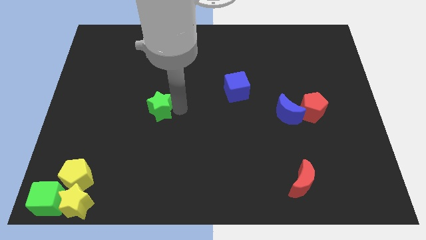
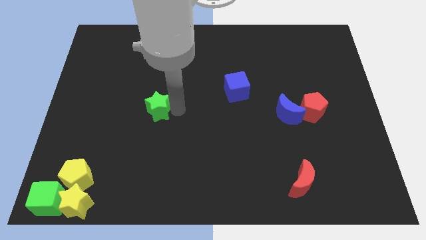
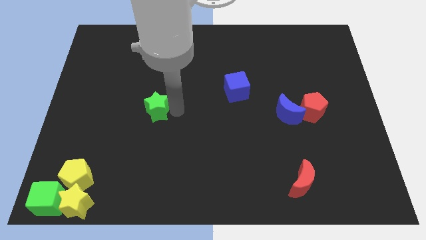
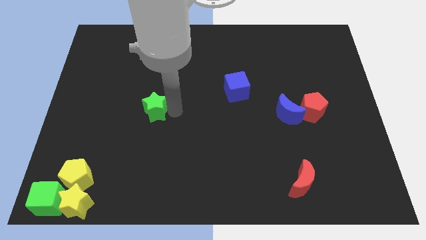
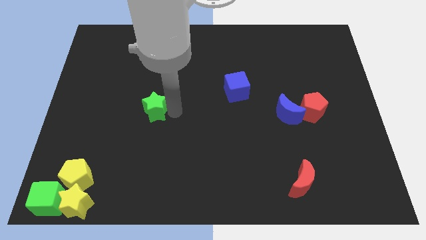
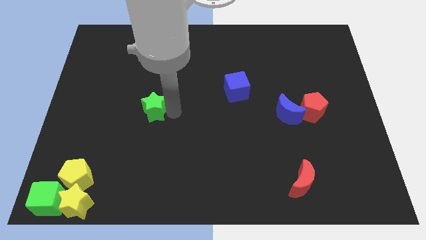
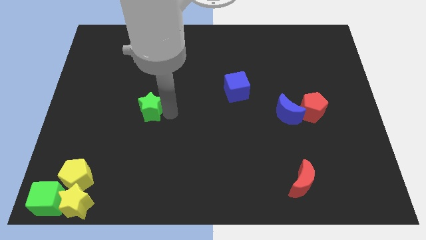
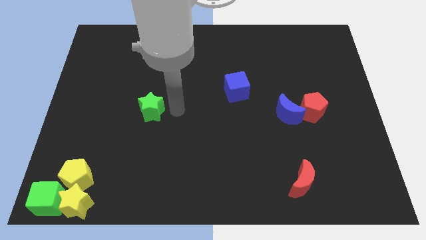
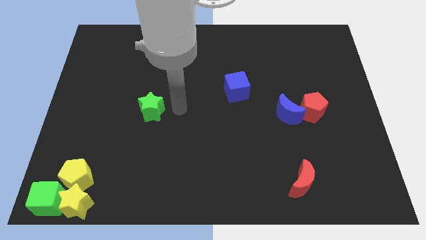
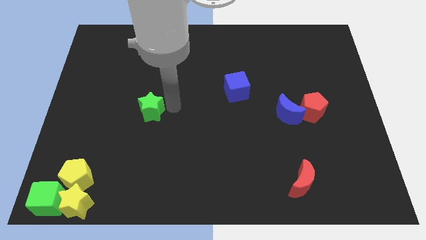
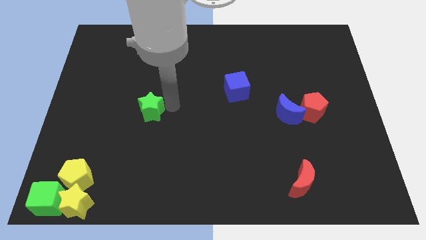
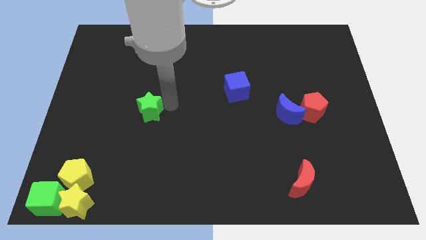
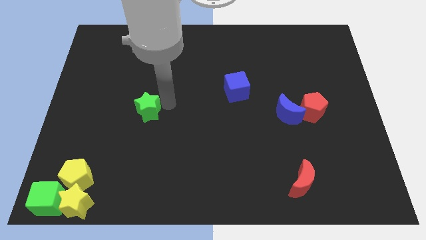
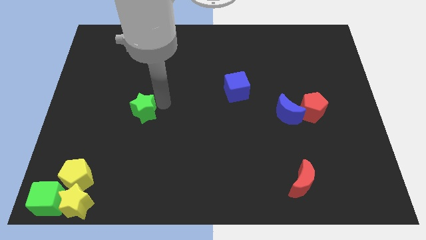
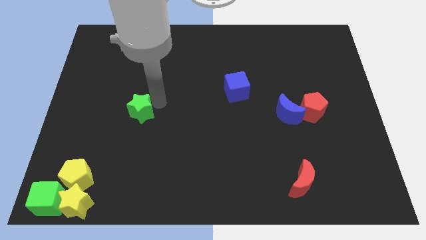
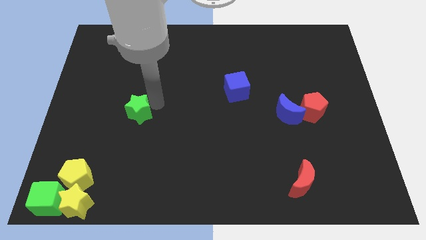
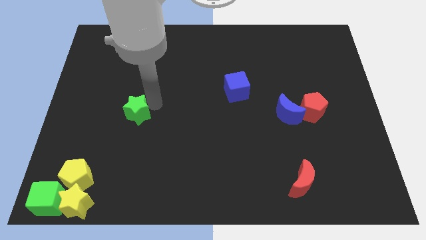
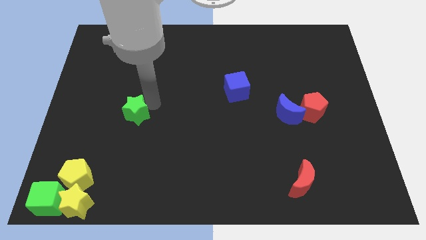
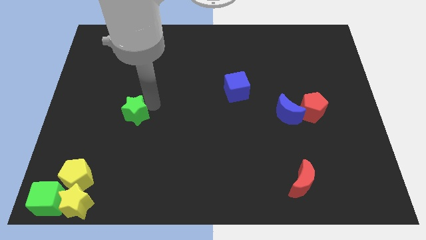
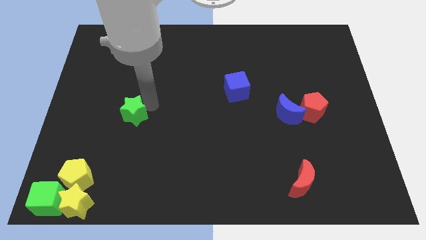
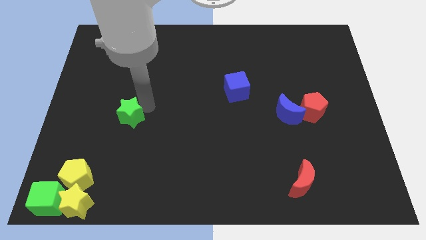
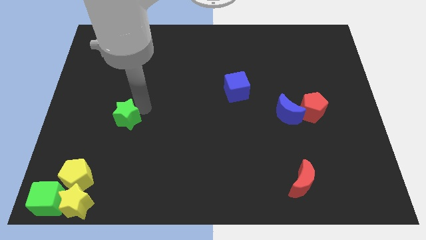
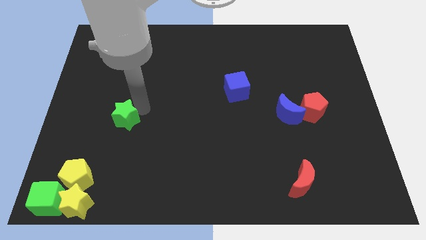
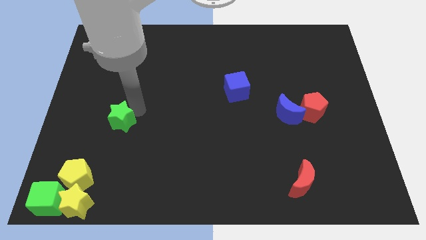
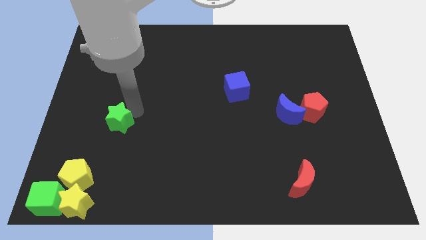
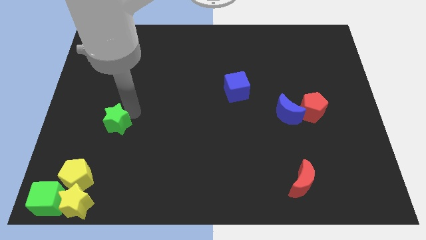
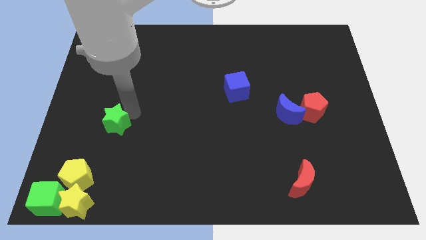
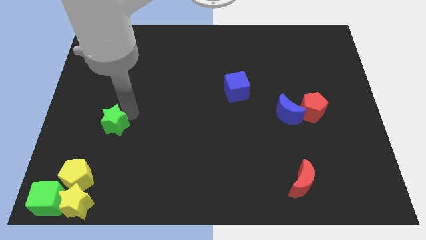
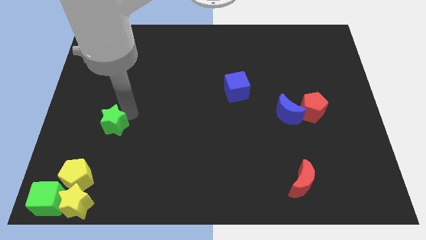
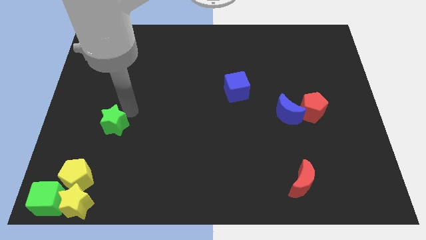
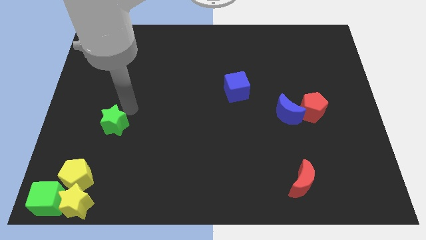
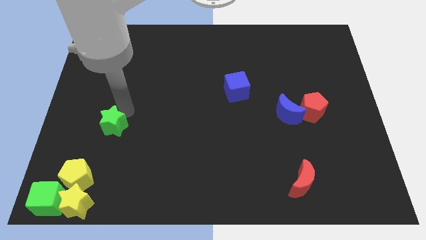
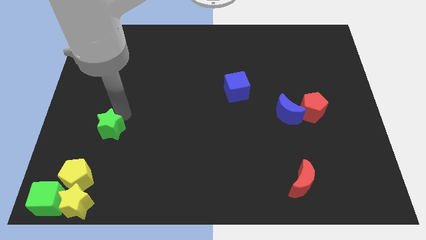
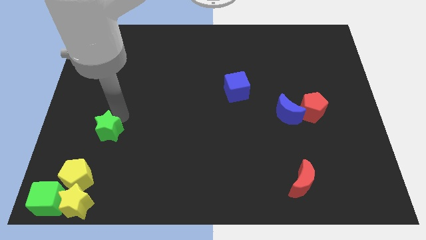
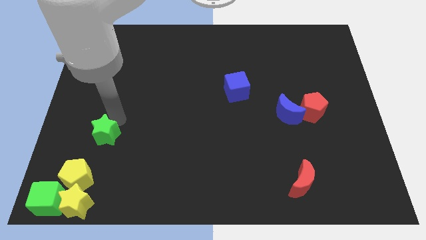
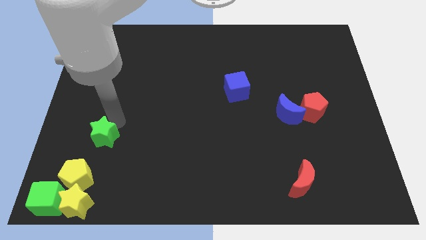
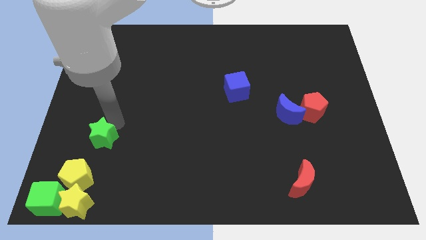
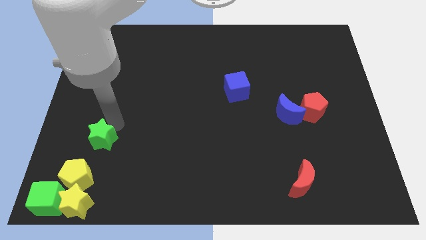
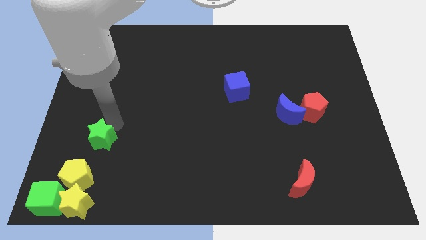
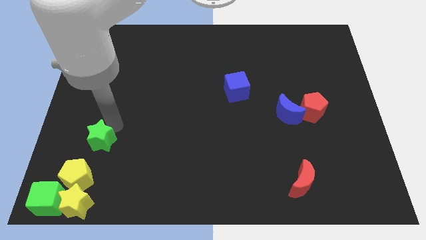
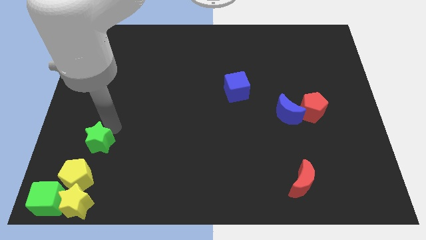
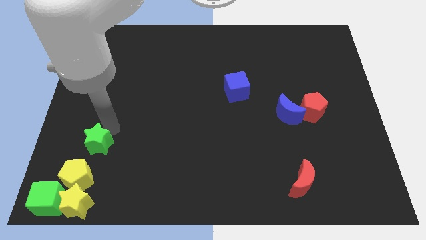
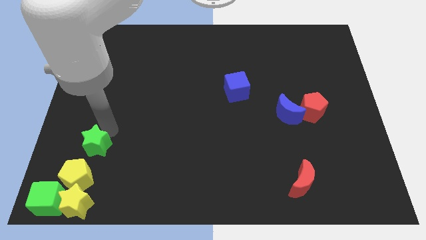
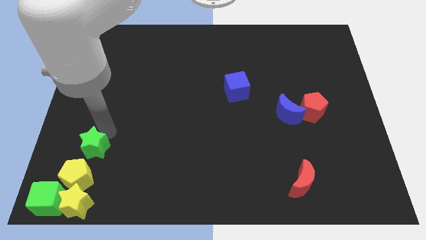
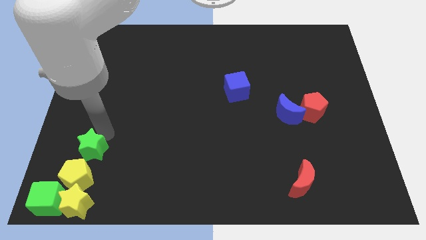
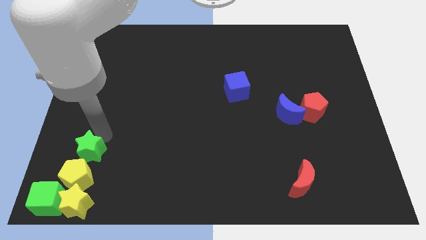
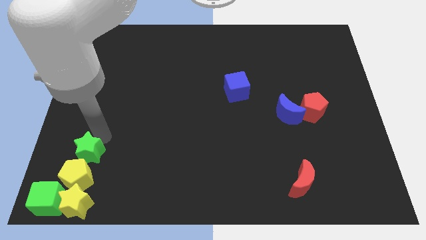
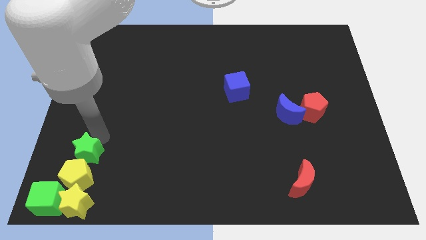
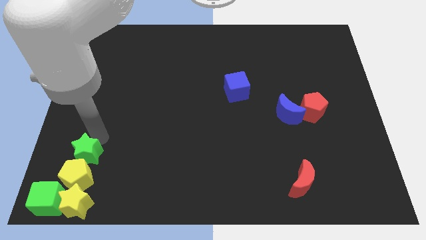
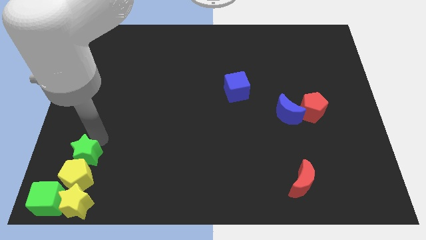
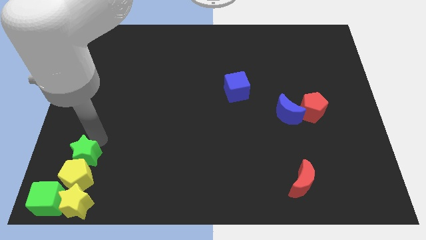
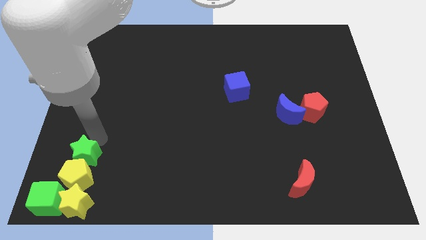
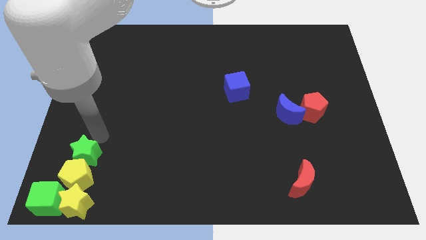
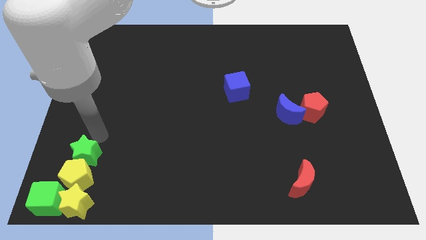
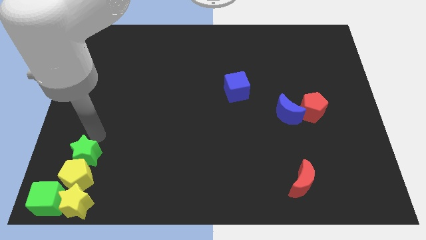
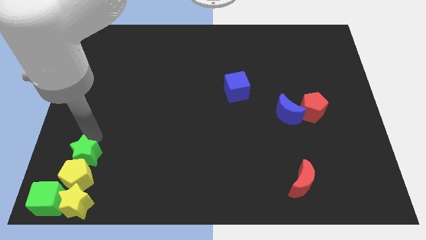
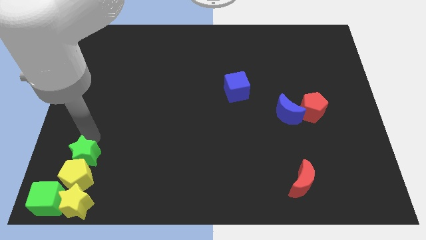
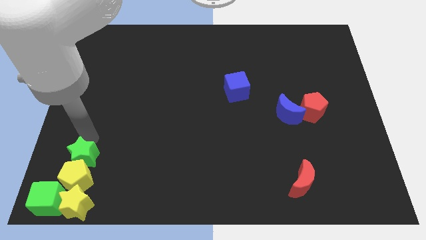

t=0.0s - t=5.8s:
put the green star vertically above the yellow pentagon

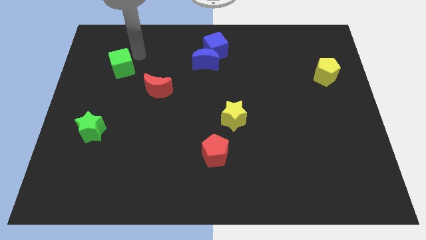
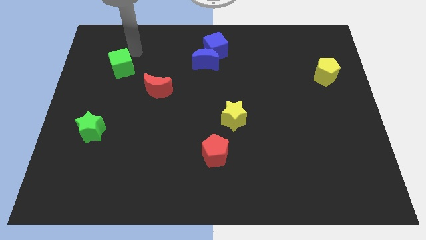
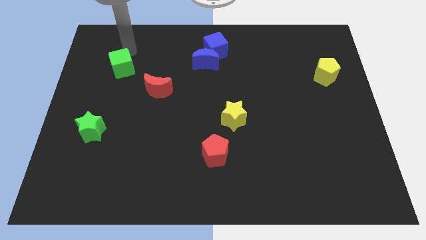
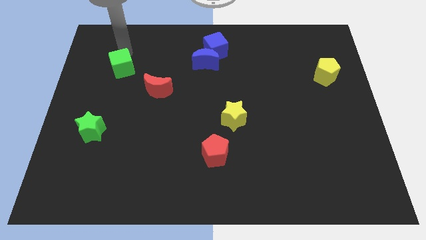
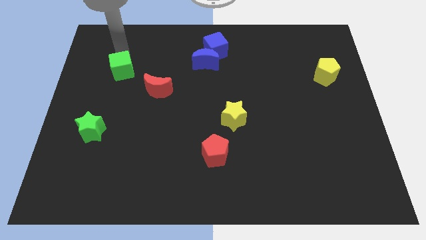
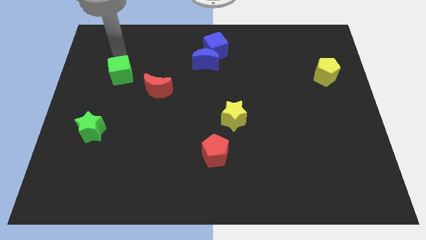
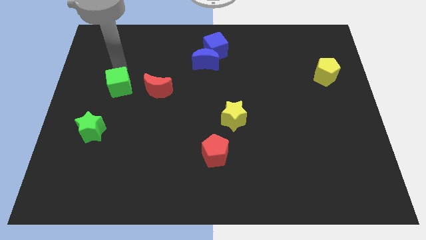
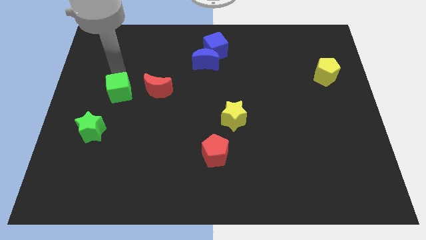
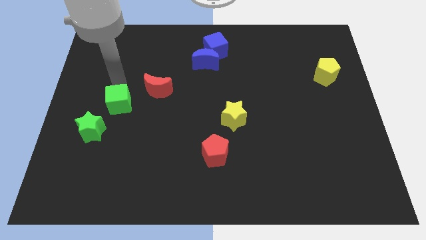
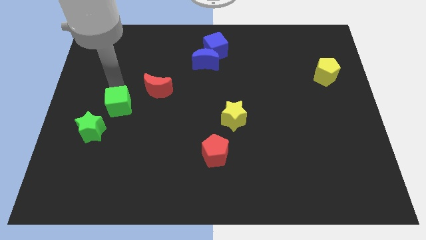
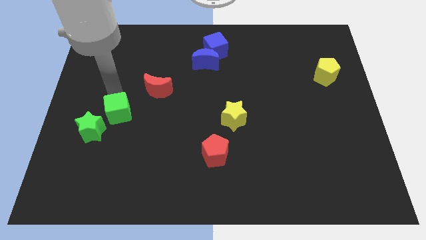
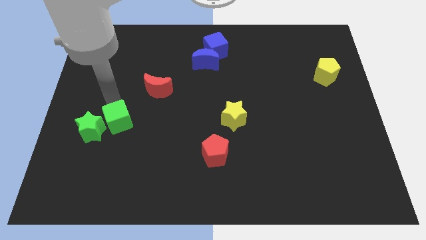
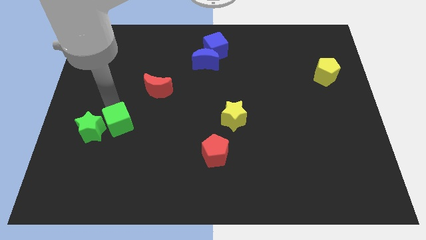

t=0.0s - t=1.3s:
put the green cube right to the green star

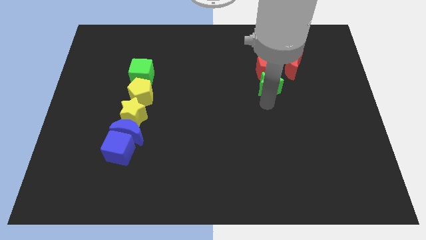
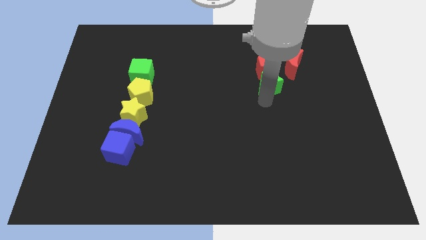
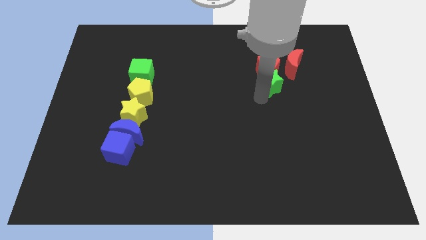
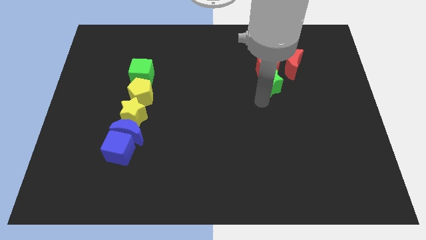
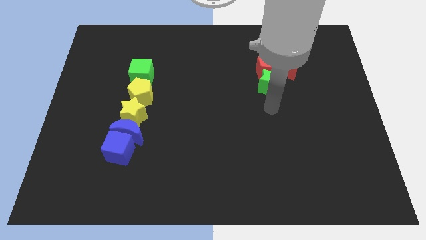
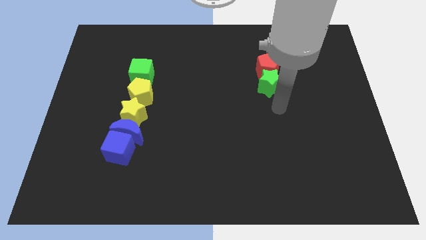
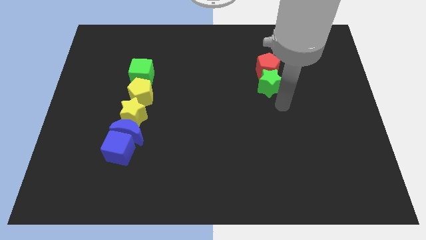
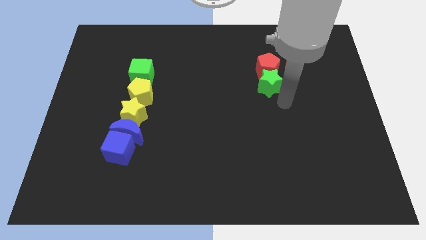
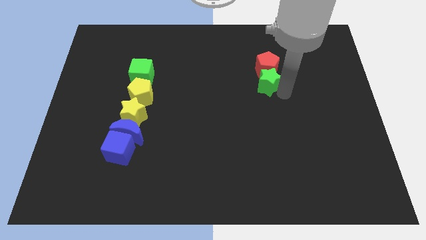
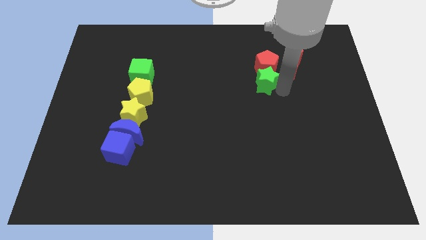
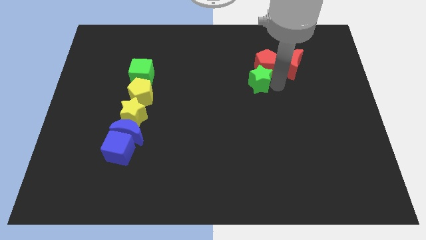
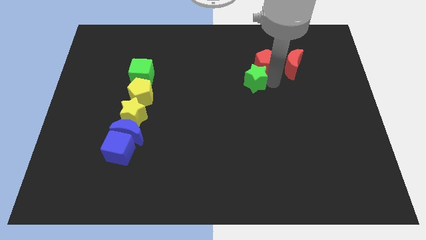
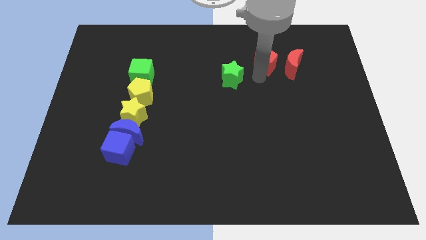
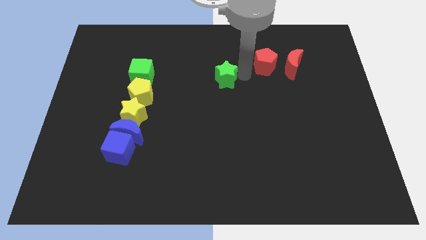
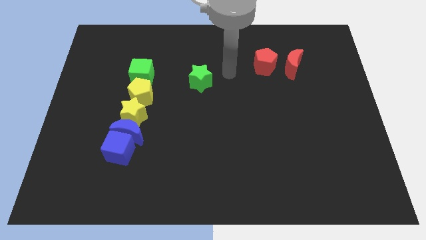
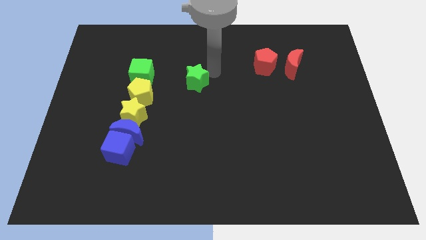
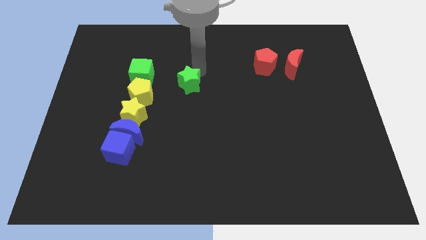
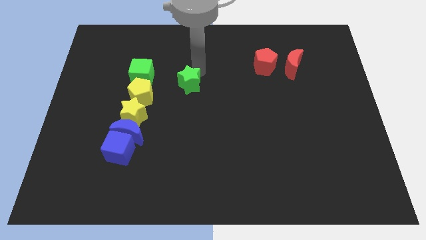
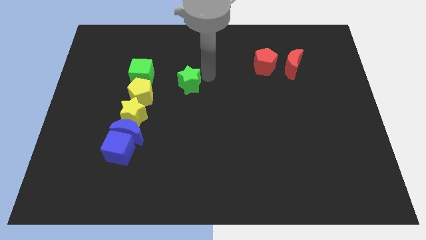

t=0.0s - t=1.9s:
move the green star towards left
